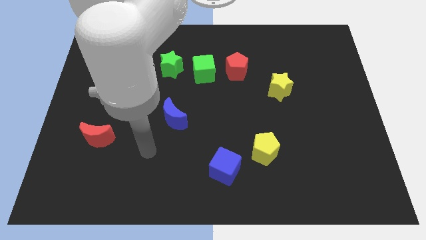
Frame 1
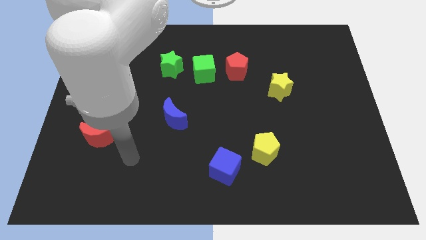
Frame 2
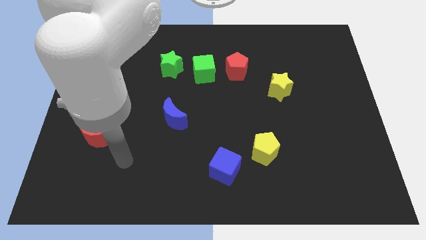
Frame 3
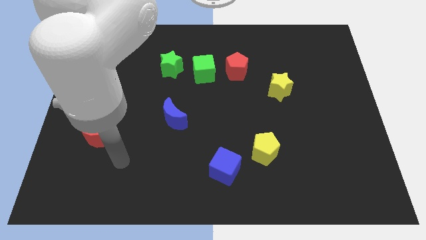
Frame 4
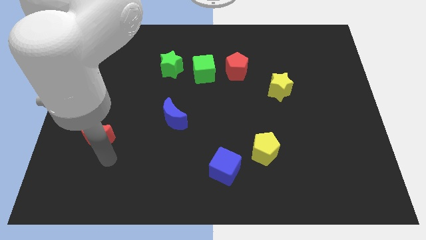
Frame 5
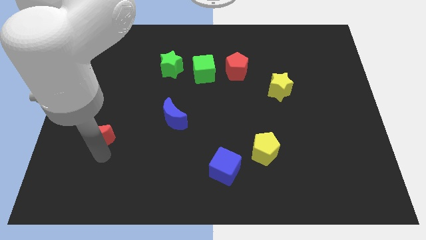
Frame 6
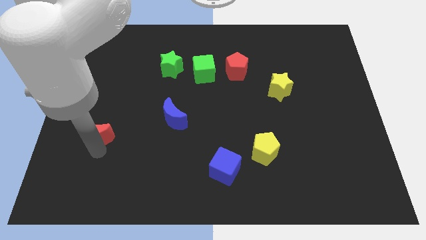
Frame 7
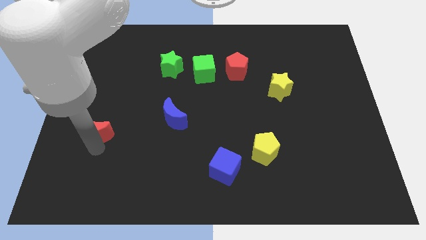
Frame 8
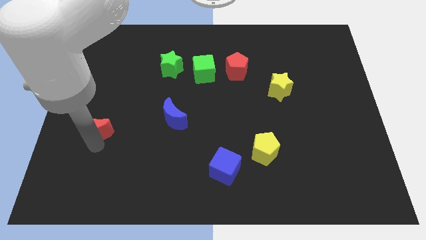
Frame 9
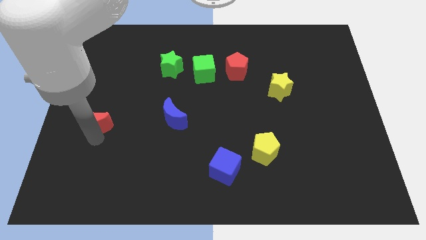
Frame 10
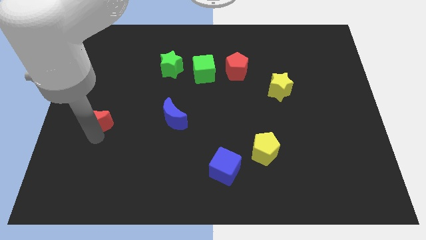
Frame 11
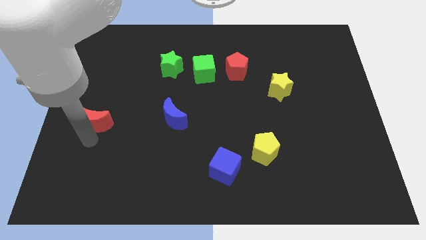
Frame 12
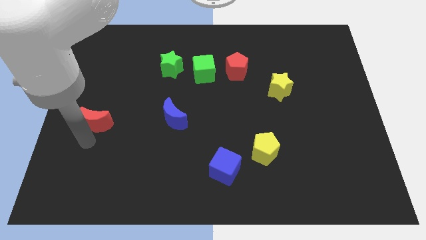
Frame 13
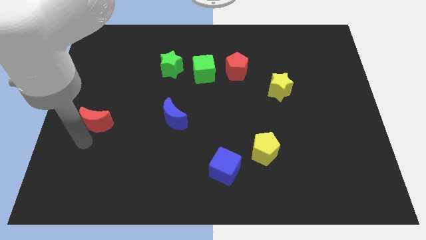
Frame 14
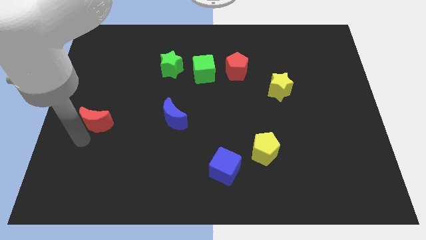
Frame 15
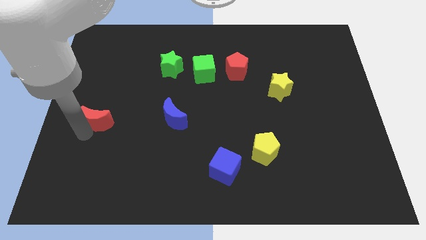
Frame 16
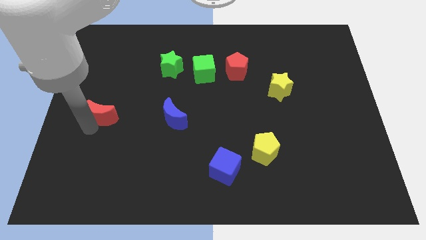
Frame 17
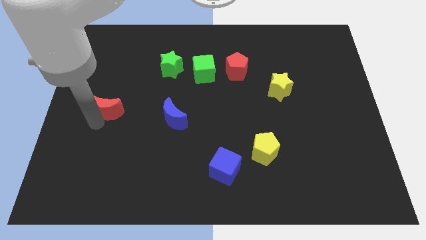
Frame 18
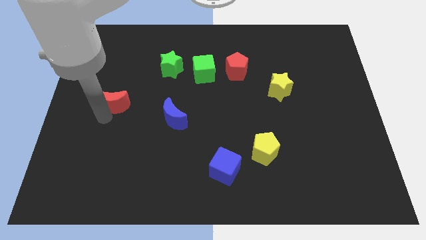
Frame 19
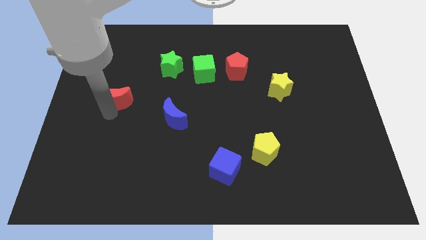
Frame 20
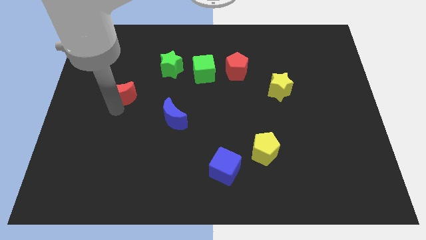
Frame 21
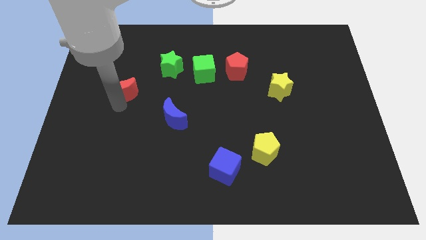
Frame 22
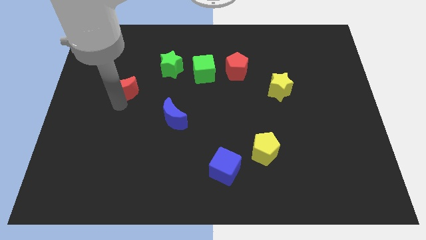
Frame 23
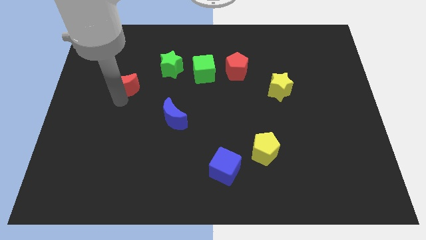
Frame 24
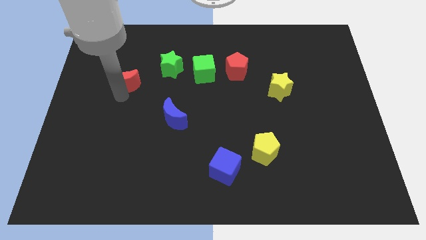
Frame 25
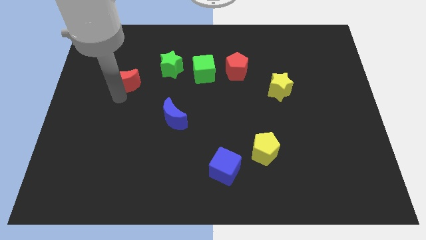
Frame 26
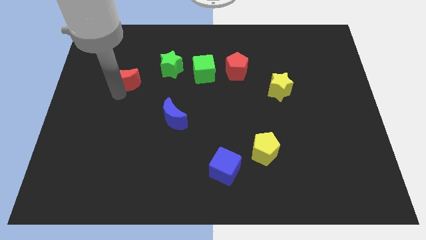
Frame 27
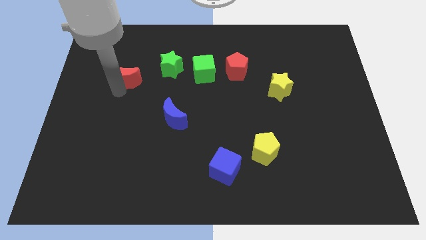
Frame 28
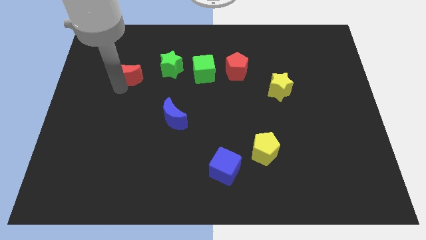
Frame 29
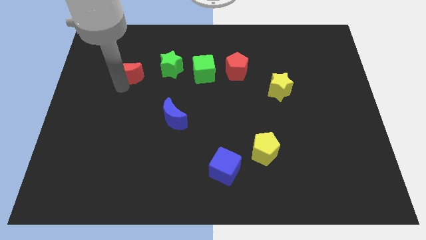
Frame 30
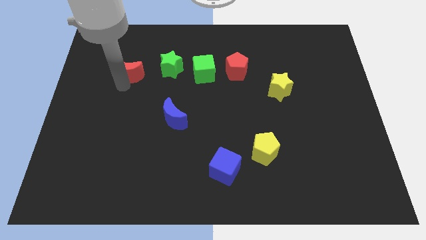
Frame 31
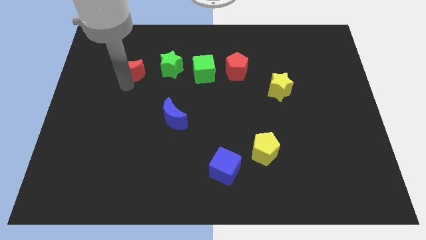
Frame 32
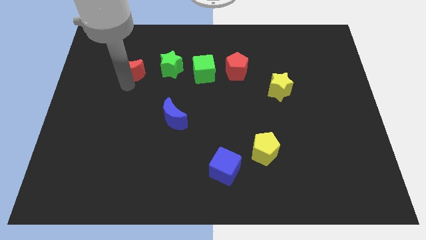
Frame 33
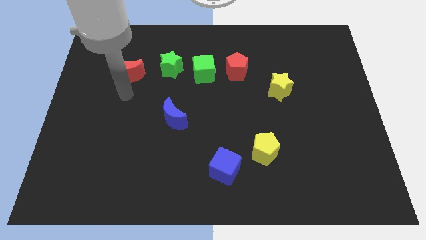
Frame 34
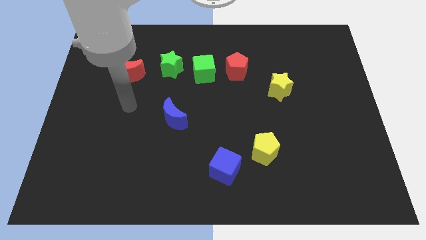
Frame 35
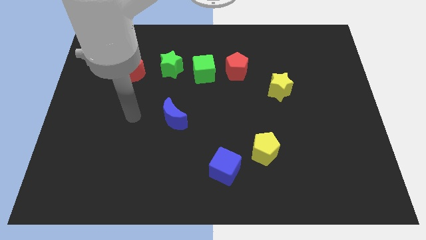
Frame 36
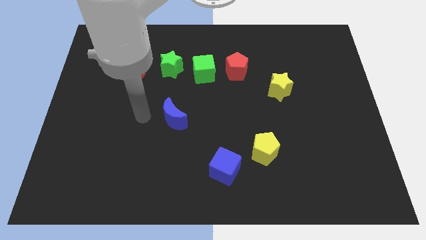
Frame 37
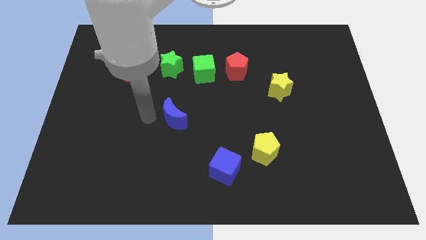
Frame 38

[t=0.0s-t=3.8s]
place red moon to the left of the green star

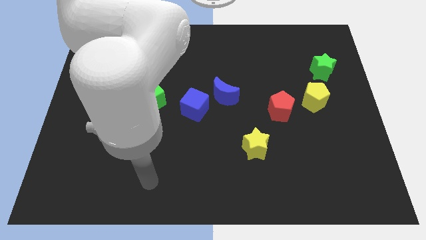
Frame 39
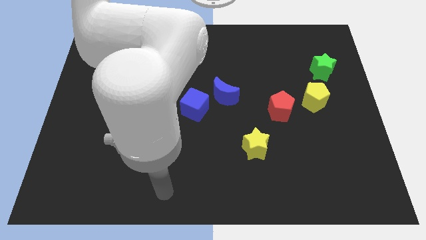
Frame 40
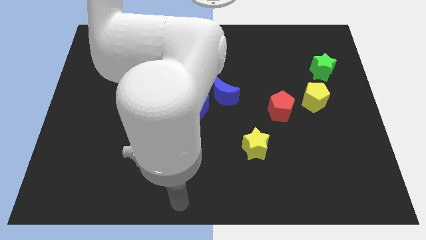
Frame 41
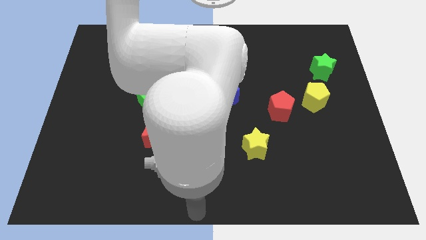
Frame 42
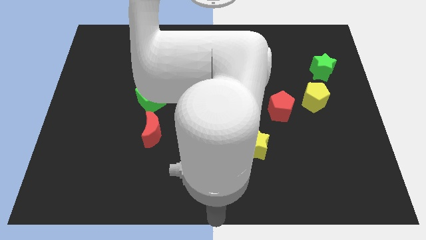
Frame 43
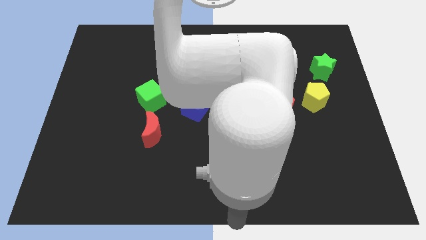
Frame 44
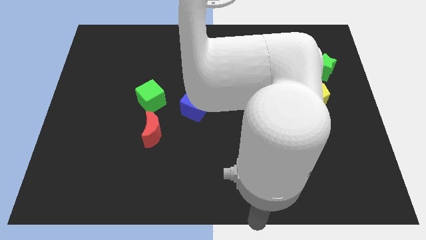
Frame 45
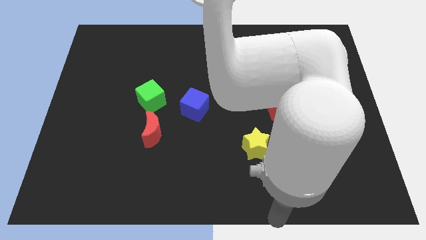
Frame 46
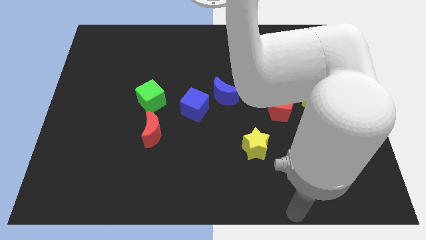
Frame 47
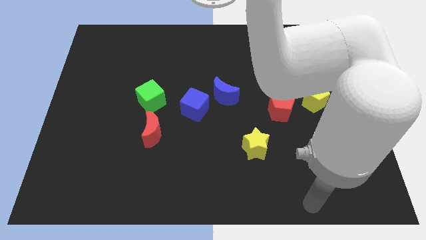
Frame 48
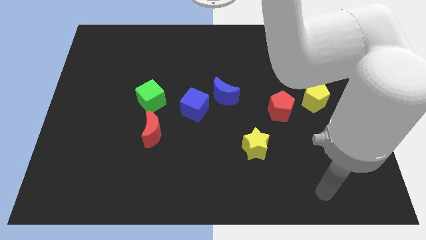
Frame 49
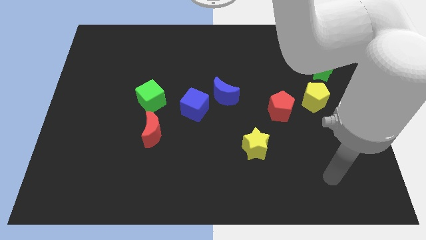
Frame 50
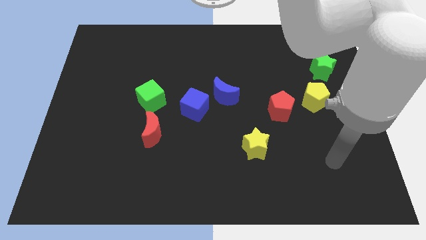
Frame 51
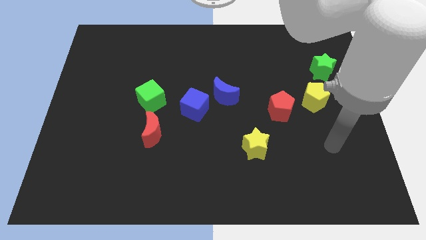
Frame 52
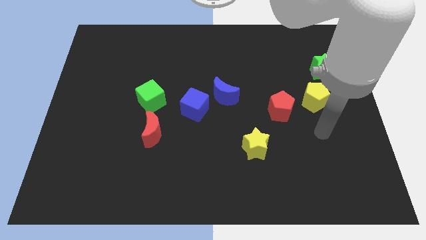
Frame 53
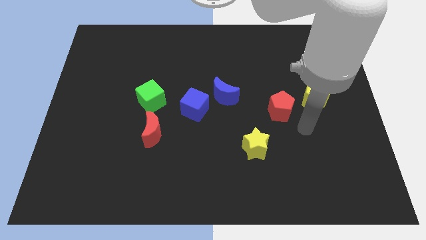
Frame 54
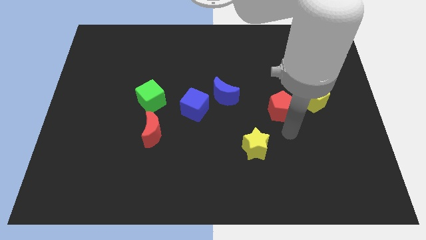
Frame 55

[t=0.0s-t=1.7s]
place your arm to rigth side of the red pentagon

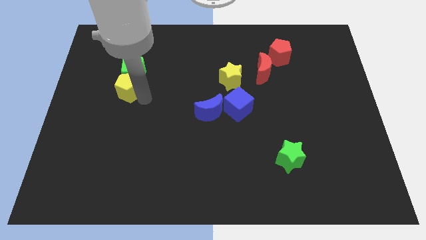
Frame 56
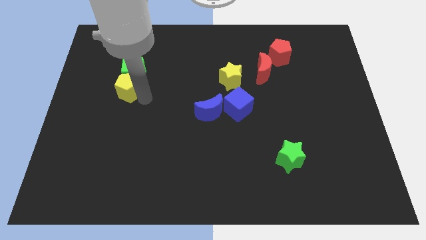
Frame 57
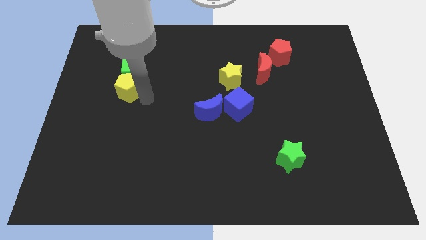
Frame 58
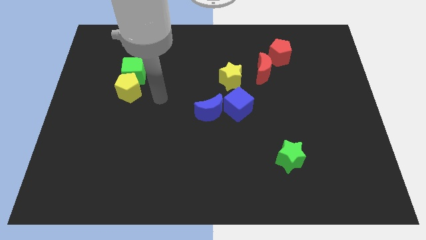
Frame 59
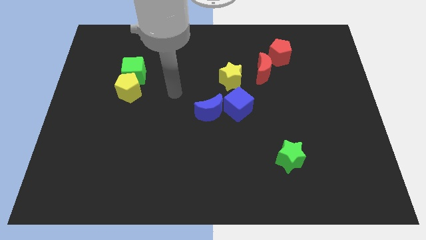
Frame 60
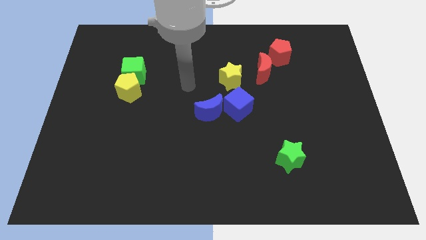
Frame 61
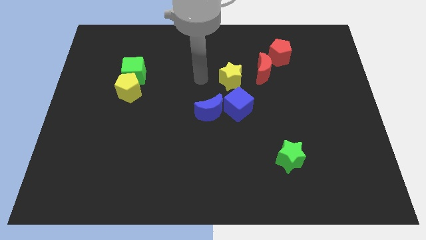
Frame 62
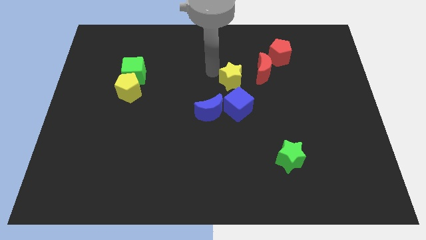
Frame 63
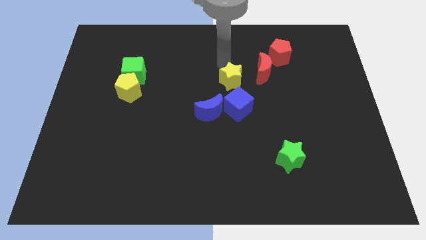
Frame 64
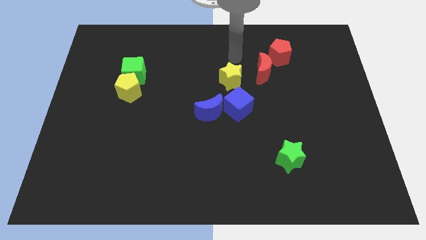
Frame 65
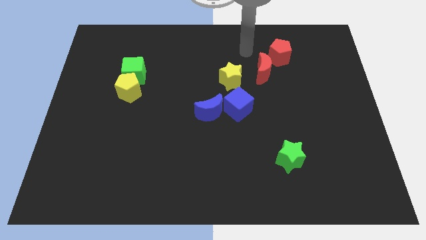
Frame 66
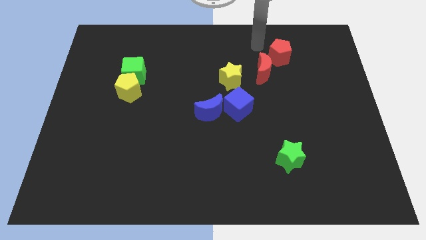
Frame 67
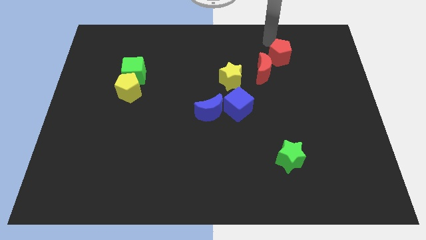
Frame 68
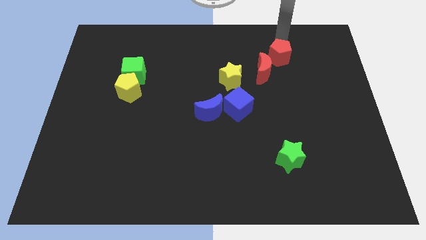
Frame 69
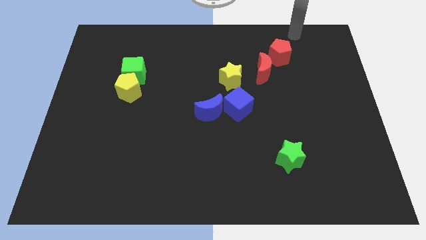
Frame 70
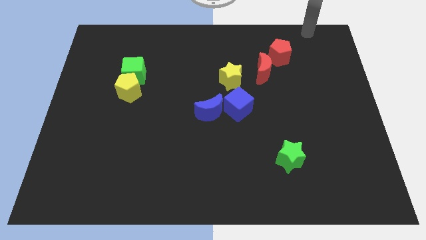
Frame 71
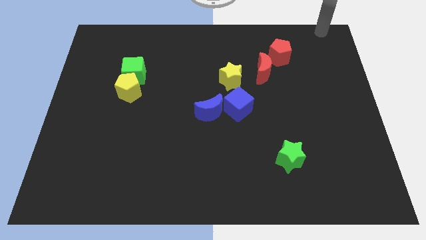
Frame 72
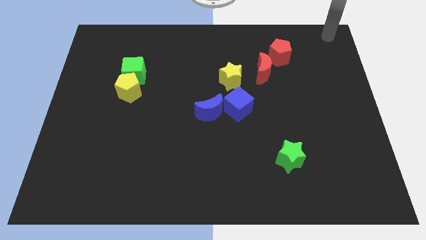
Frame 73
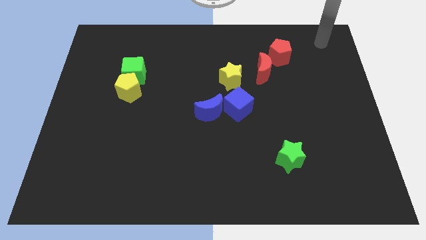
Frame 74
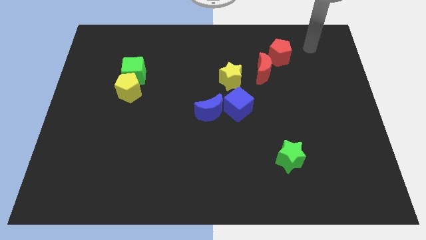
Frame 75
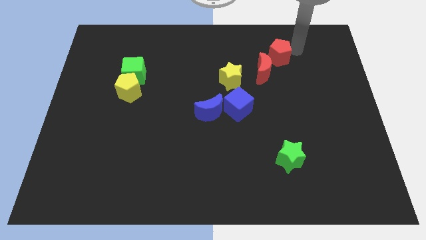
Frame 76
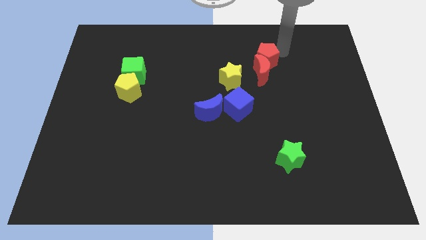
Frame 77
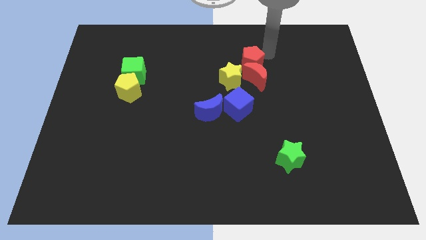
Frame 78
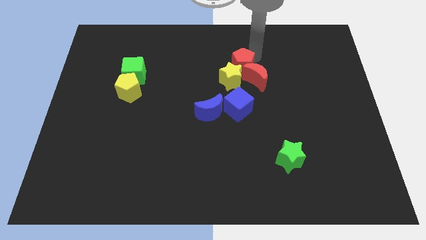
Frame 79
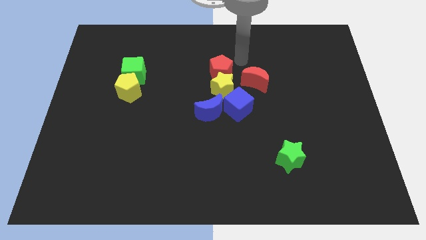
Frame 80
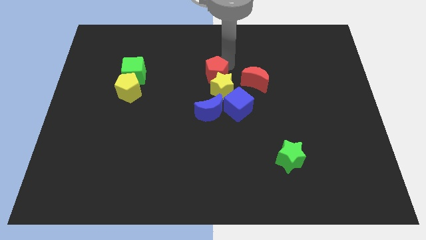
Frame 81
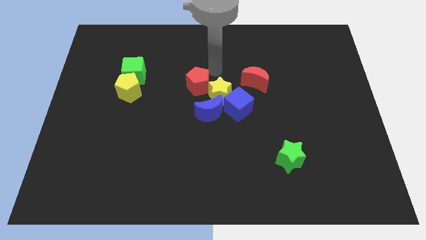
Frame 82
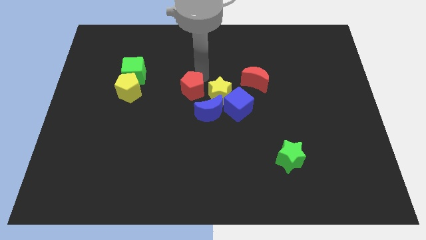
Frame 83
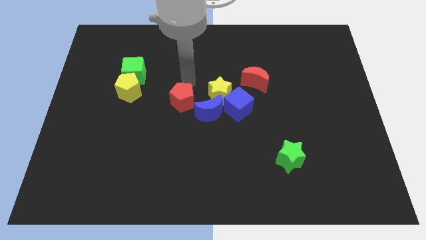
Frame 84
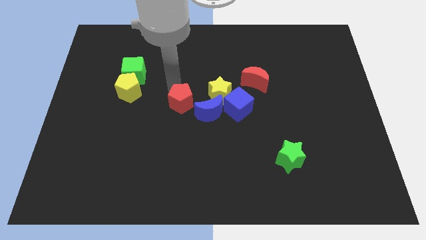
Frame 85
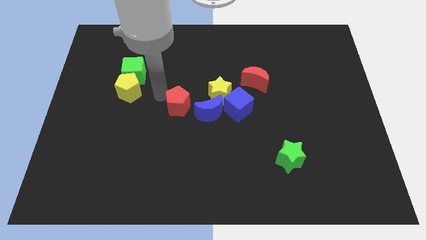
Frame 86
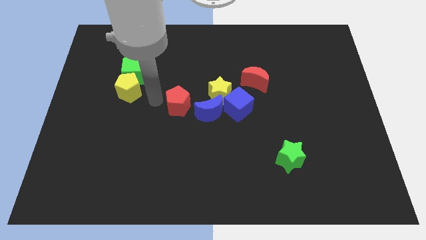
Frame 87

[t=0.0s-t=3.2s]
bring the red pentagon at the left side of the blue crescent

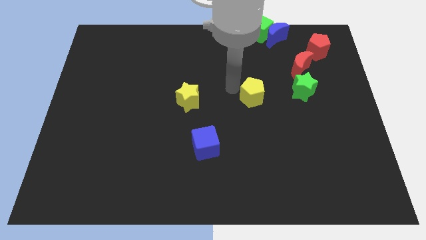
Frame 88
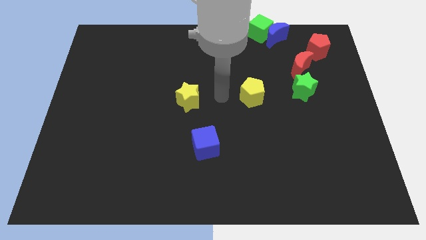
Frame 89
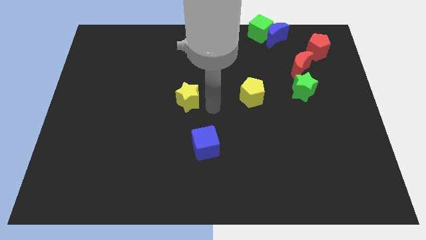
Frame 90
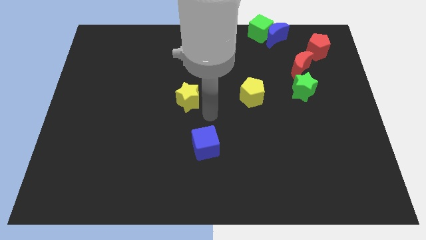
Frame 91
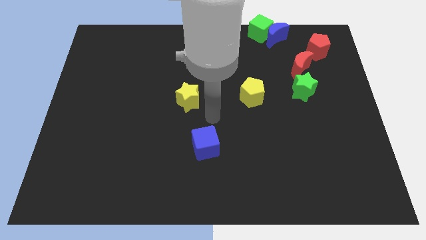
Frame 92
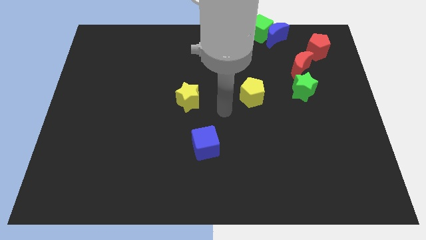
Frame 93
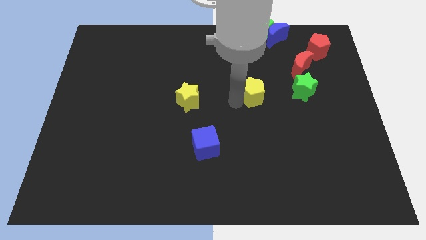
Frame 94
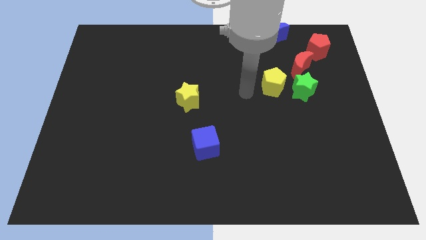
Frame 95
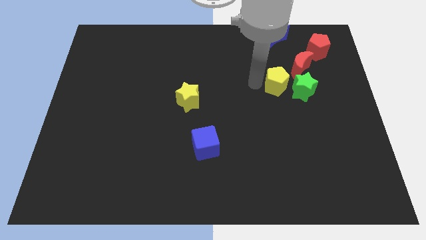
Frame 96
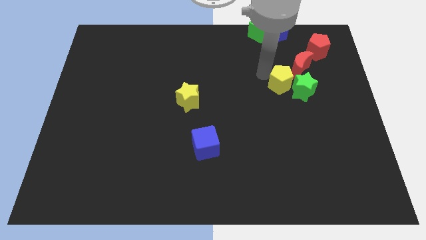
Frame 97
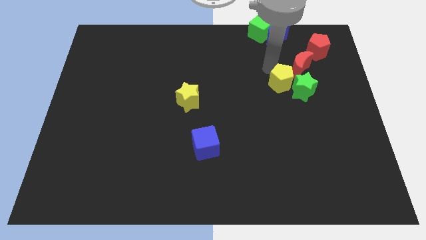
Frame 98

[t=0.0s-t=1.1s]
push the yellow pentagon towards the red moon
